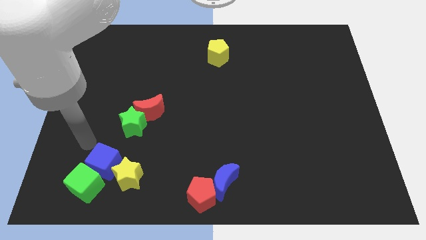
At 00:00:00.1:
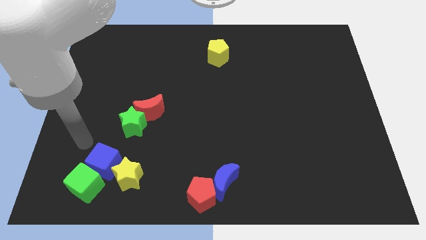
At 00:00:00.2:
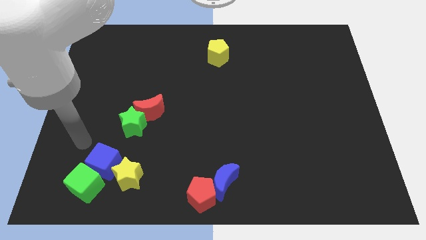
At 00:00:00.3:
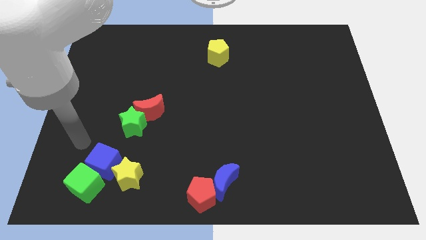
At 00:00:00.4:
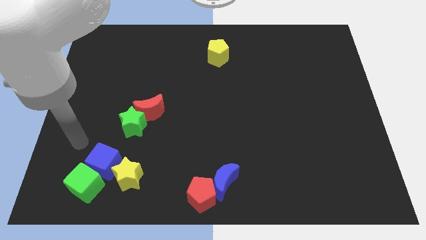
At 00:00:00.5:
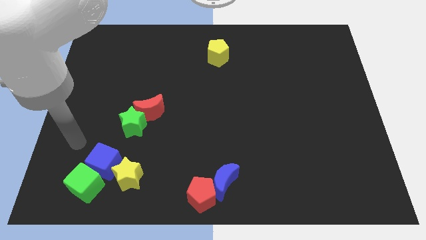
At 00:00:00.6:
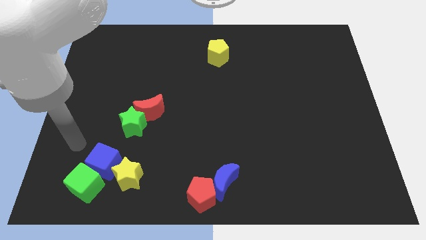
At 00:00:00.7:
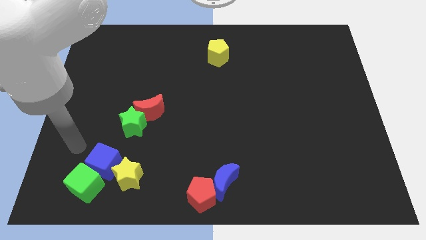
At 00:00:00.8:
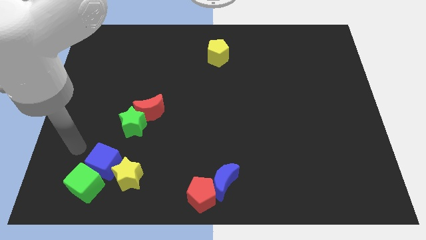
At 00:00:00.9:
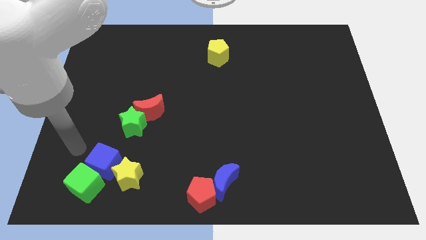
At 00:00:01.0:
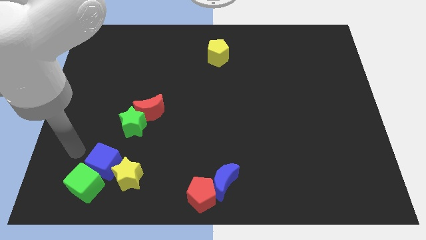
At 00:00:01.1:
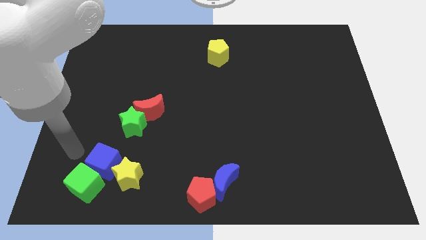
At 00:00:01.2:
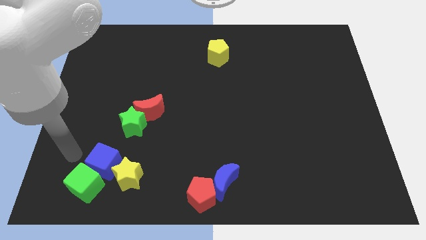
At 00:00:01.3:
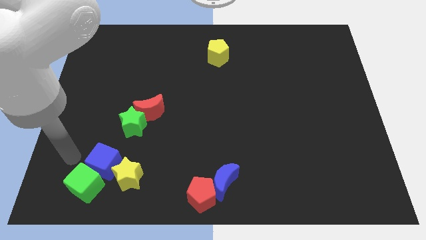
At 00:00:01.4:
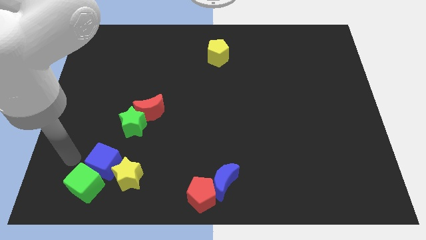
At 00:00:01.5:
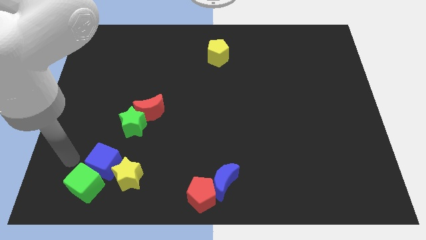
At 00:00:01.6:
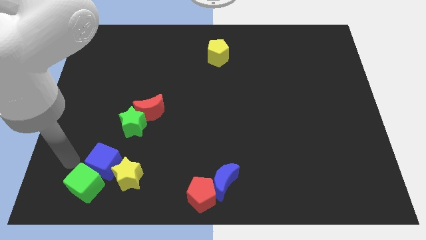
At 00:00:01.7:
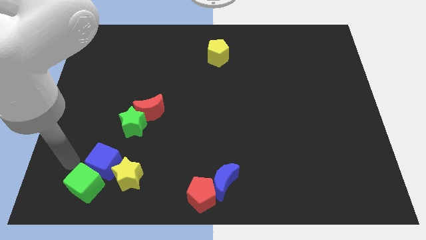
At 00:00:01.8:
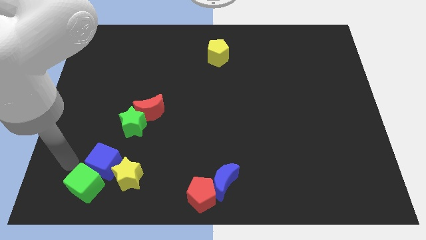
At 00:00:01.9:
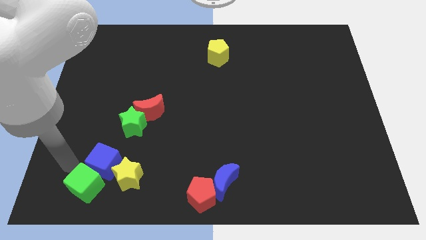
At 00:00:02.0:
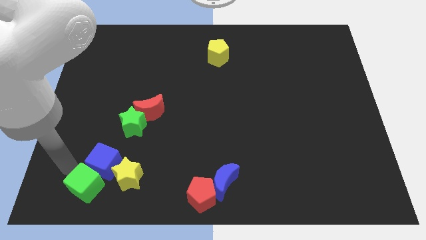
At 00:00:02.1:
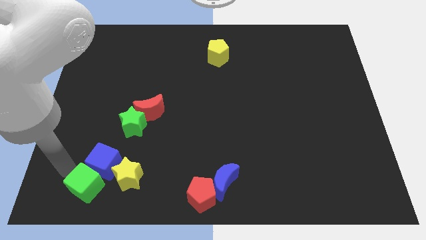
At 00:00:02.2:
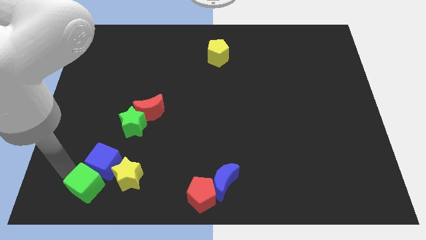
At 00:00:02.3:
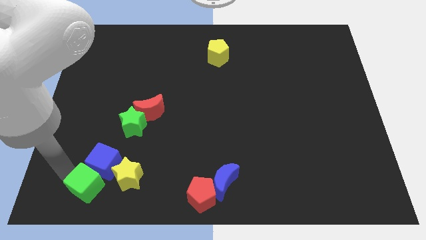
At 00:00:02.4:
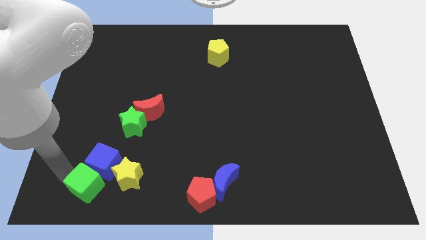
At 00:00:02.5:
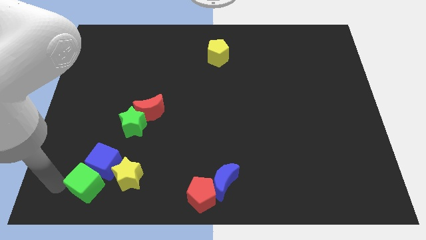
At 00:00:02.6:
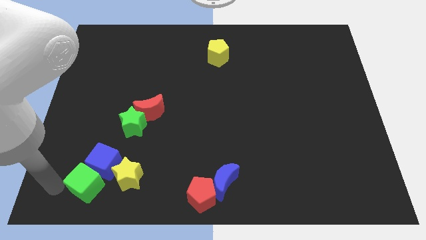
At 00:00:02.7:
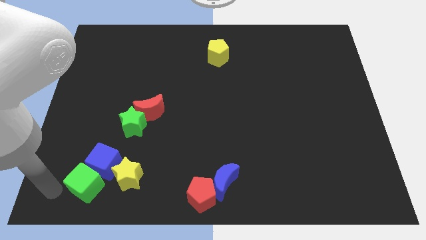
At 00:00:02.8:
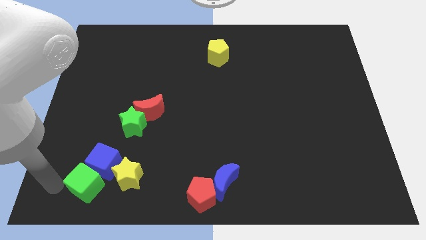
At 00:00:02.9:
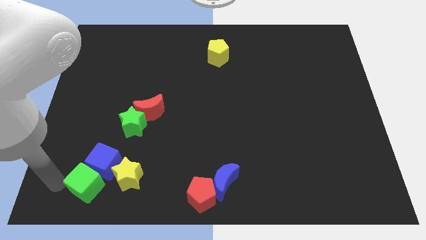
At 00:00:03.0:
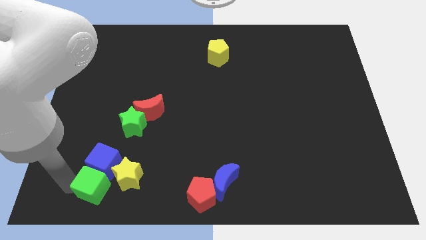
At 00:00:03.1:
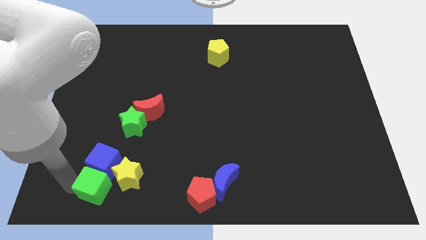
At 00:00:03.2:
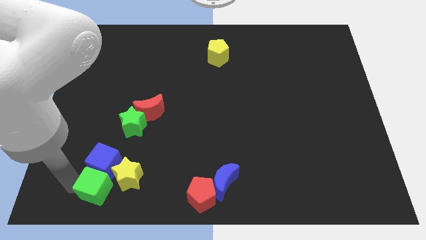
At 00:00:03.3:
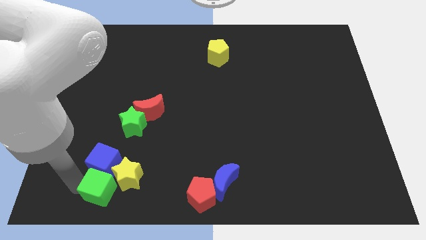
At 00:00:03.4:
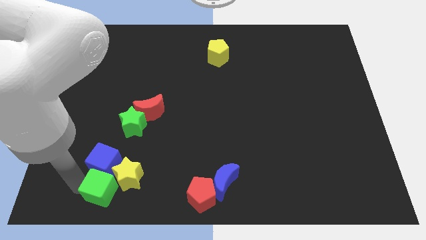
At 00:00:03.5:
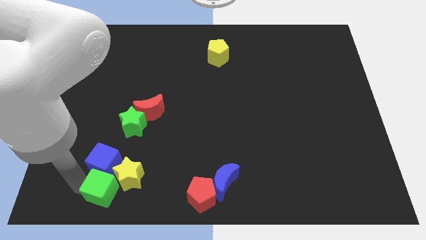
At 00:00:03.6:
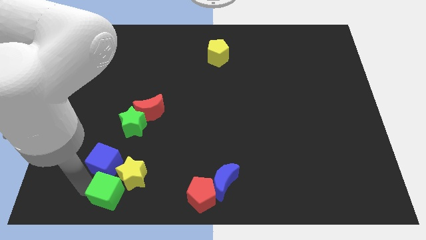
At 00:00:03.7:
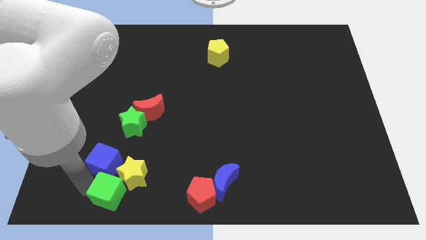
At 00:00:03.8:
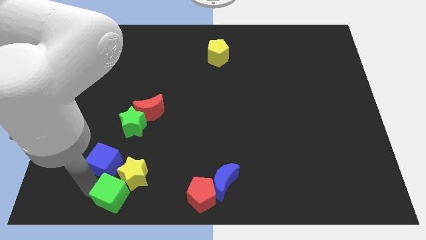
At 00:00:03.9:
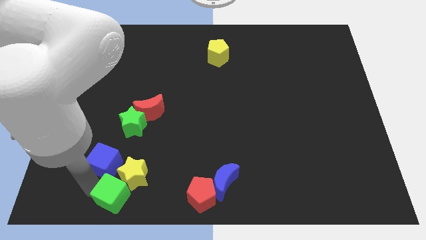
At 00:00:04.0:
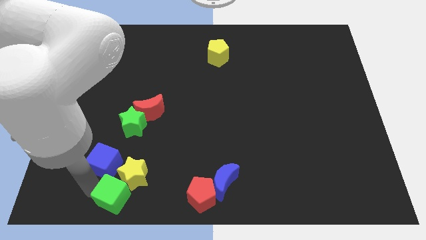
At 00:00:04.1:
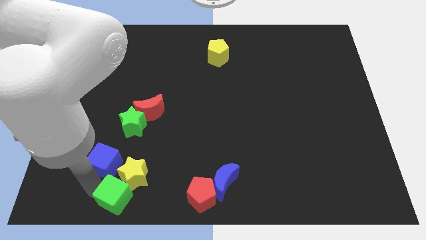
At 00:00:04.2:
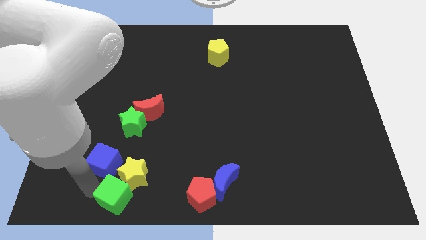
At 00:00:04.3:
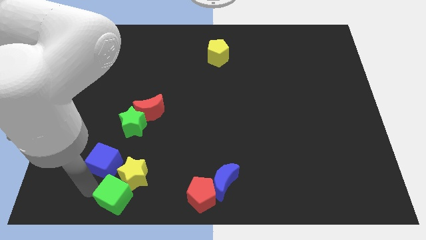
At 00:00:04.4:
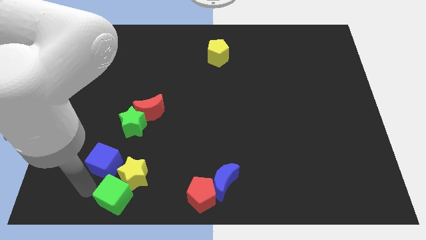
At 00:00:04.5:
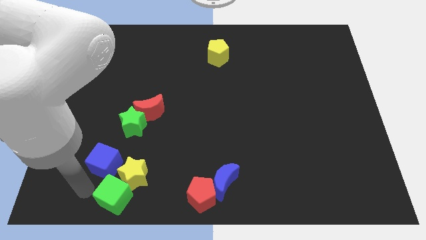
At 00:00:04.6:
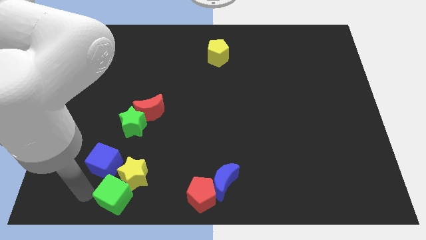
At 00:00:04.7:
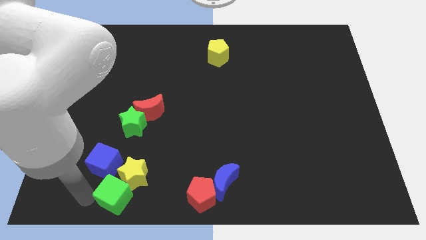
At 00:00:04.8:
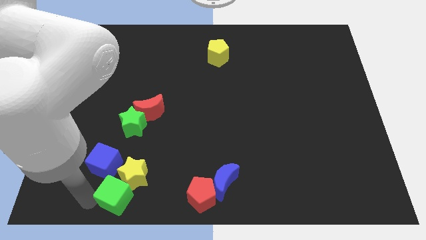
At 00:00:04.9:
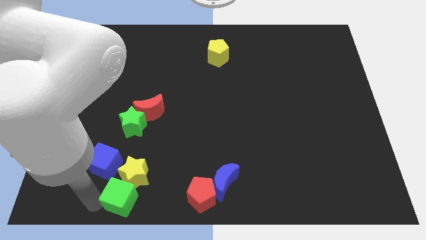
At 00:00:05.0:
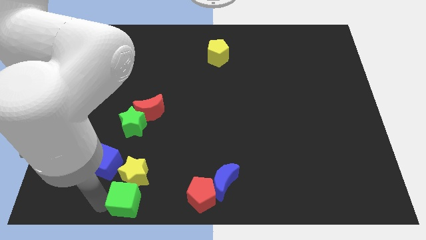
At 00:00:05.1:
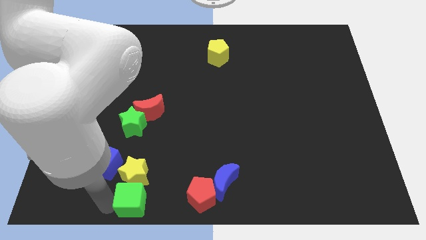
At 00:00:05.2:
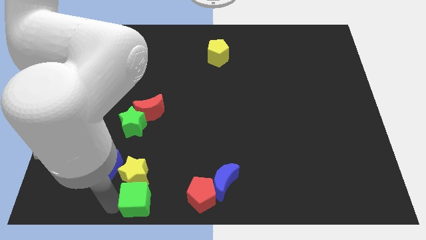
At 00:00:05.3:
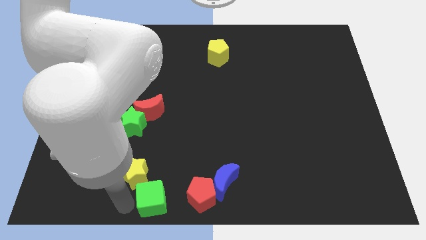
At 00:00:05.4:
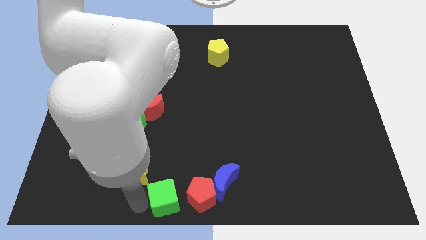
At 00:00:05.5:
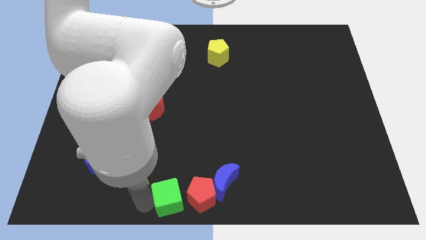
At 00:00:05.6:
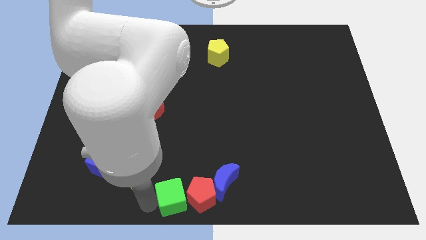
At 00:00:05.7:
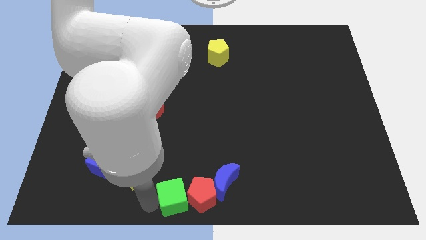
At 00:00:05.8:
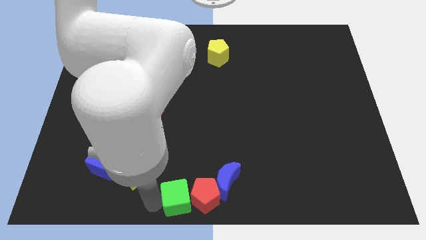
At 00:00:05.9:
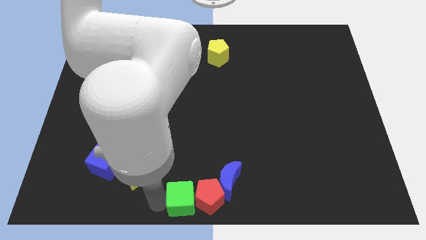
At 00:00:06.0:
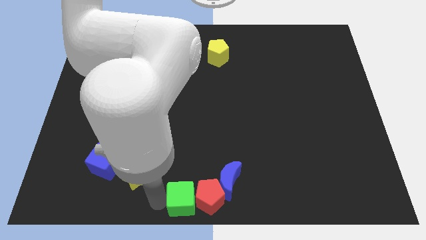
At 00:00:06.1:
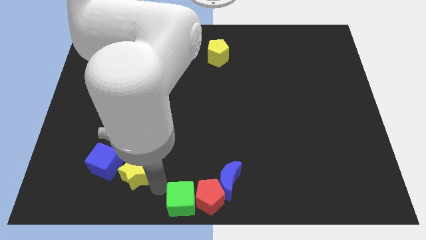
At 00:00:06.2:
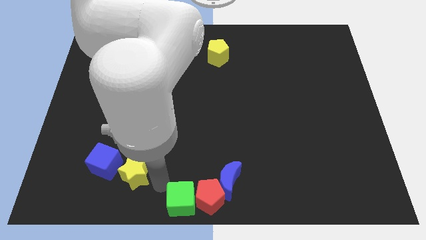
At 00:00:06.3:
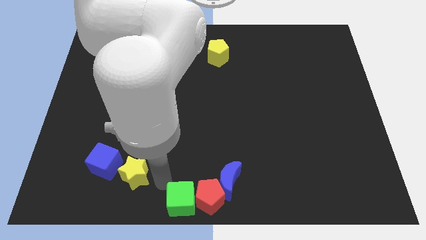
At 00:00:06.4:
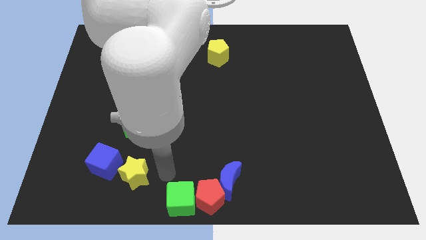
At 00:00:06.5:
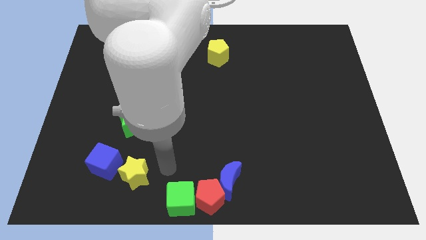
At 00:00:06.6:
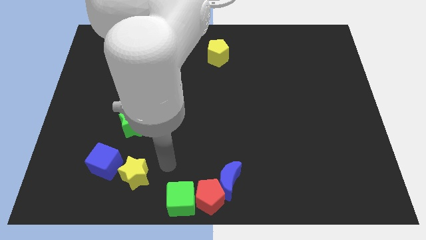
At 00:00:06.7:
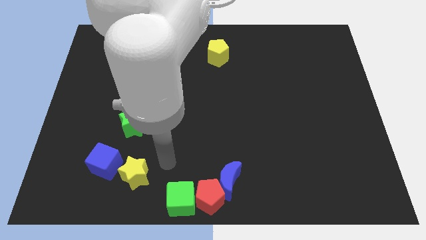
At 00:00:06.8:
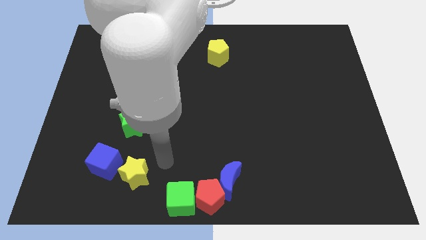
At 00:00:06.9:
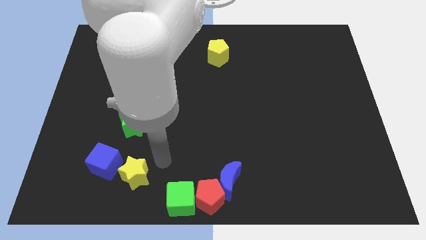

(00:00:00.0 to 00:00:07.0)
push the green cube into the red pentagon

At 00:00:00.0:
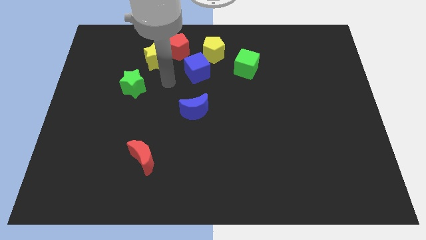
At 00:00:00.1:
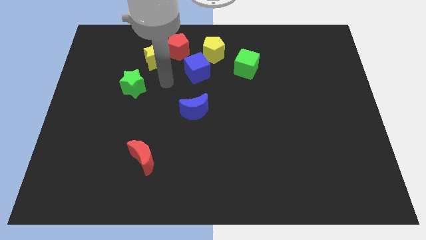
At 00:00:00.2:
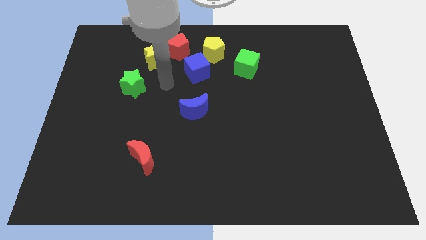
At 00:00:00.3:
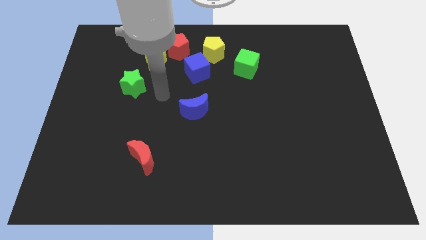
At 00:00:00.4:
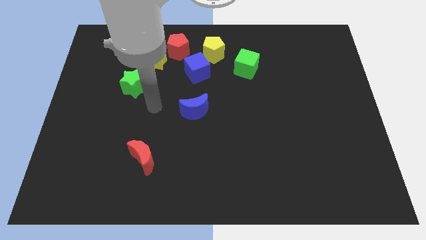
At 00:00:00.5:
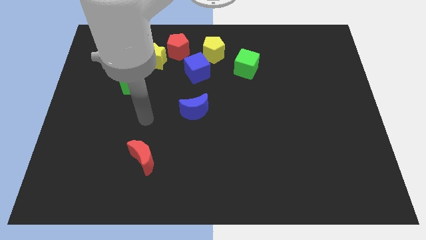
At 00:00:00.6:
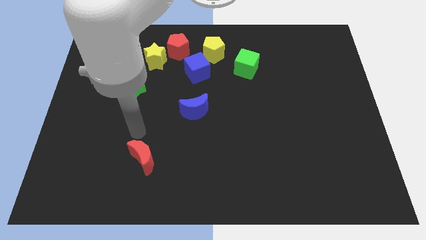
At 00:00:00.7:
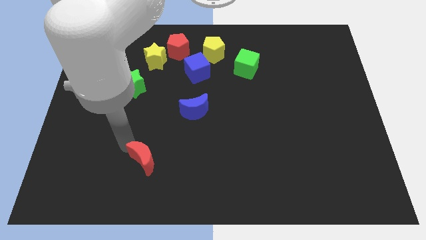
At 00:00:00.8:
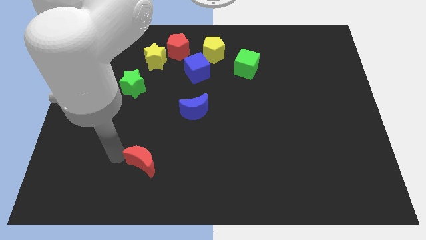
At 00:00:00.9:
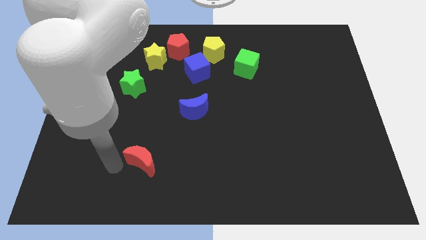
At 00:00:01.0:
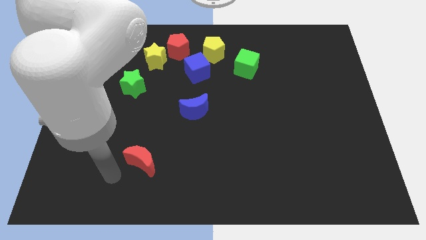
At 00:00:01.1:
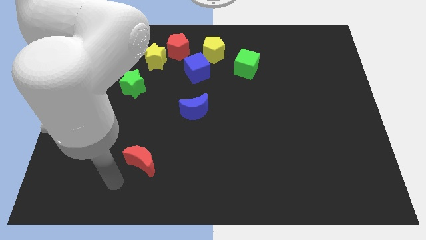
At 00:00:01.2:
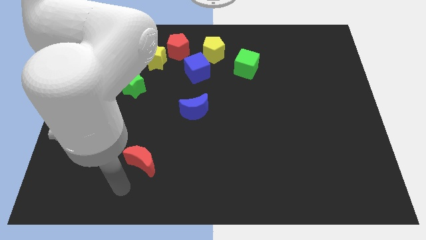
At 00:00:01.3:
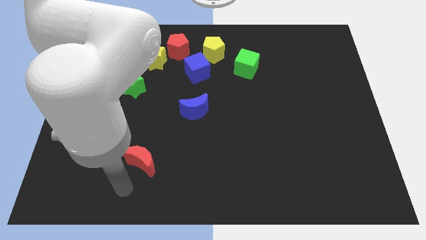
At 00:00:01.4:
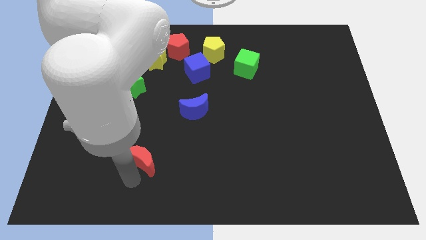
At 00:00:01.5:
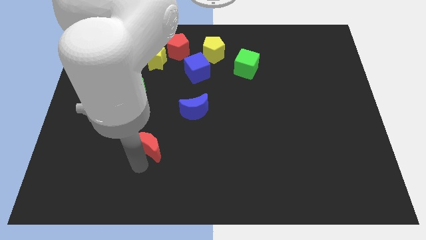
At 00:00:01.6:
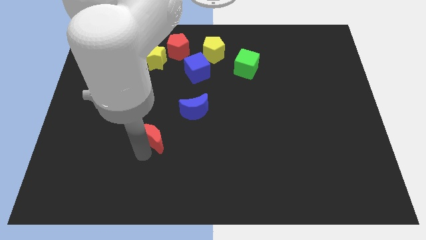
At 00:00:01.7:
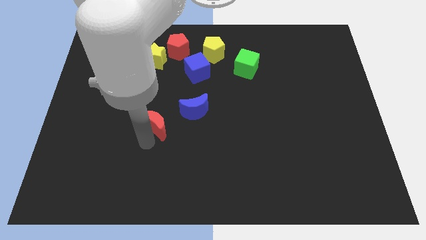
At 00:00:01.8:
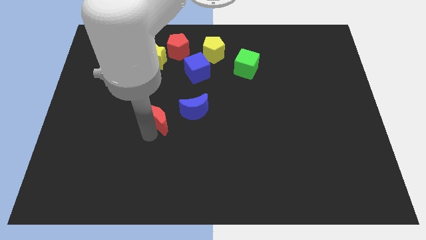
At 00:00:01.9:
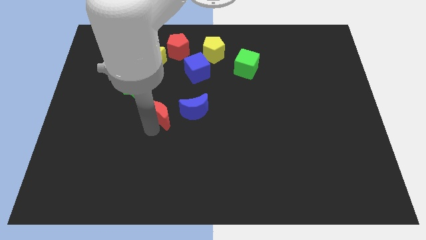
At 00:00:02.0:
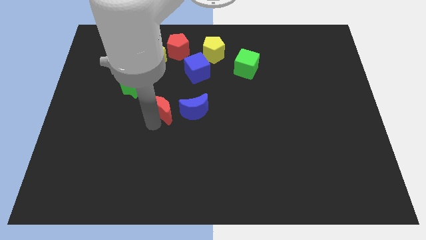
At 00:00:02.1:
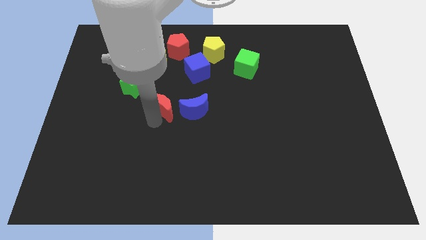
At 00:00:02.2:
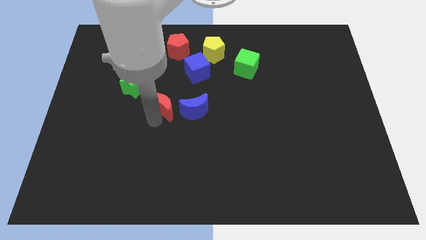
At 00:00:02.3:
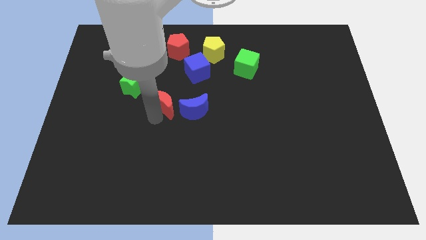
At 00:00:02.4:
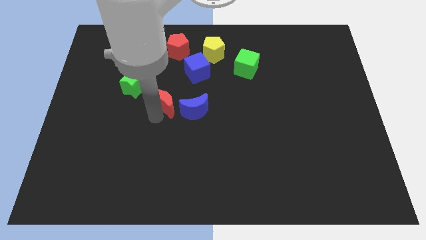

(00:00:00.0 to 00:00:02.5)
push the red crescent to the left of the blue crescent
